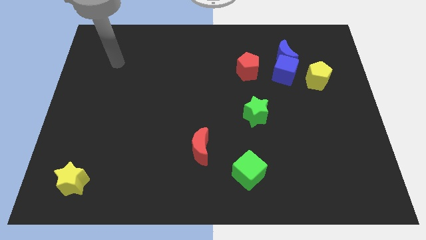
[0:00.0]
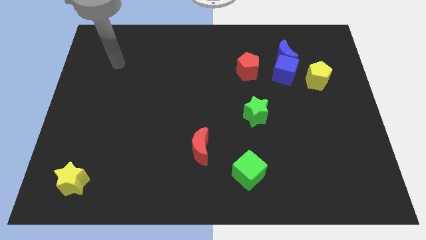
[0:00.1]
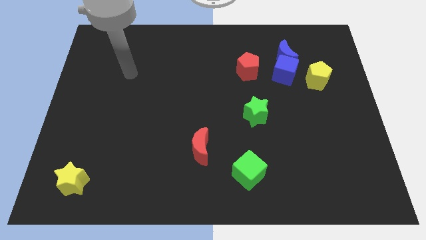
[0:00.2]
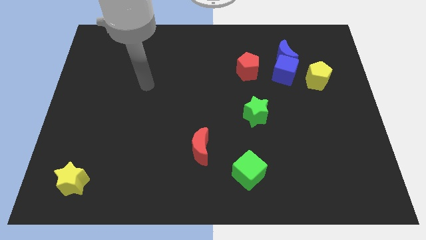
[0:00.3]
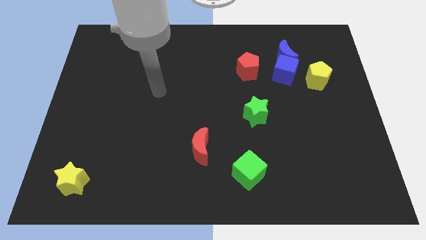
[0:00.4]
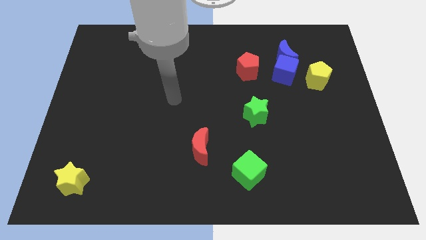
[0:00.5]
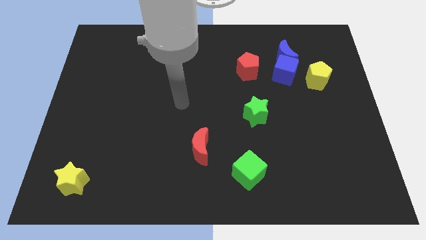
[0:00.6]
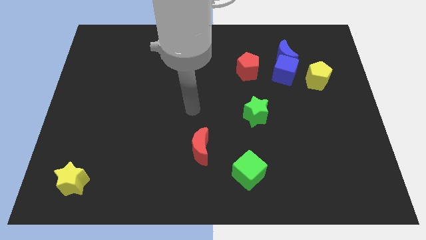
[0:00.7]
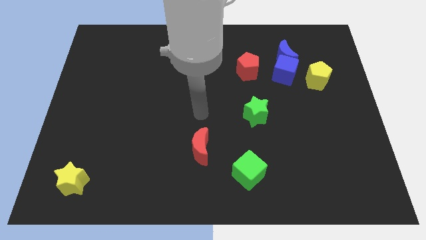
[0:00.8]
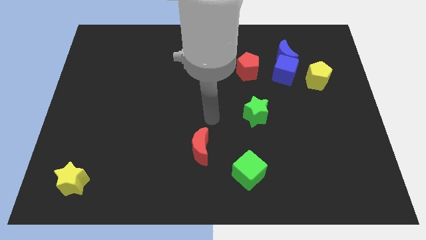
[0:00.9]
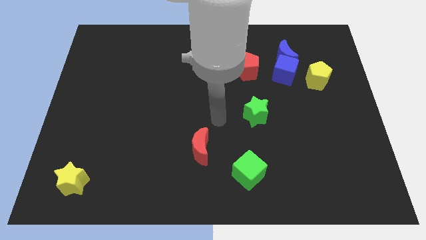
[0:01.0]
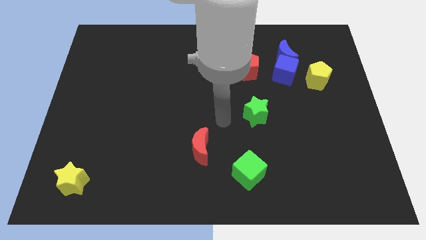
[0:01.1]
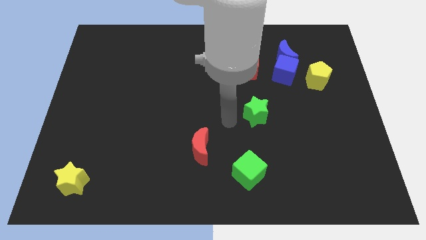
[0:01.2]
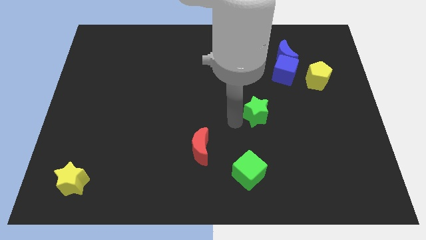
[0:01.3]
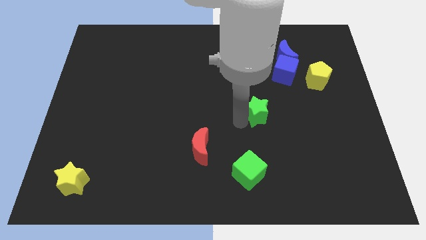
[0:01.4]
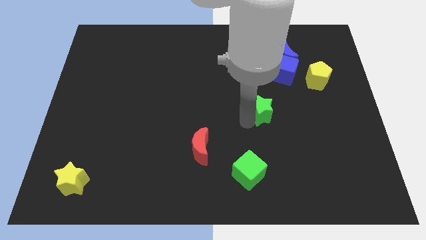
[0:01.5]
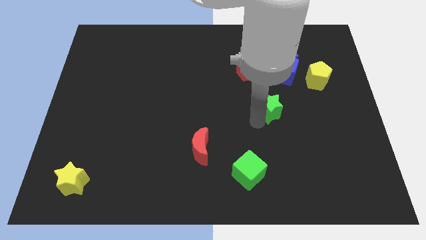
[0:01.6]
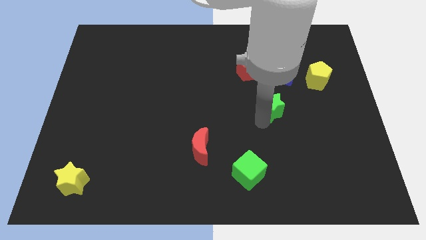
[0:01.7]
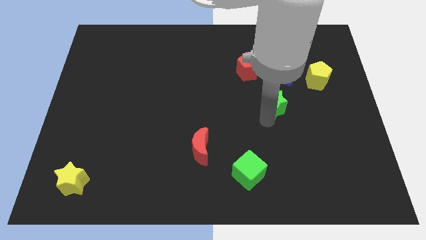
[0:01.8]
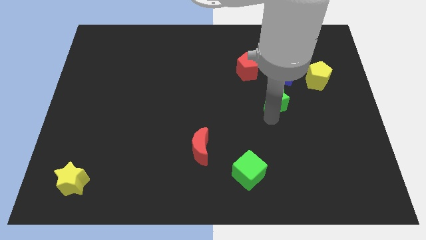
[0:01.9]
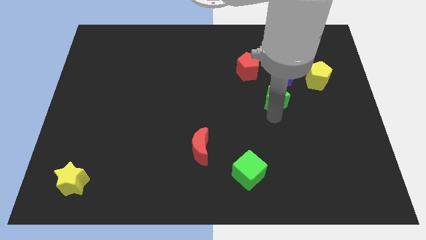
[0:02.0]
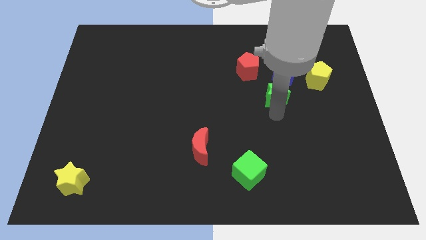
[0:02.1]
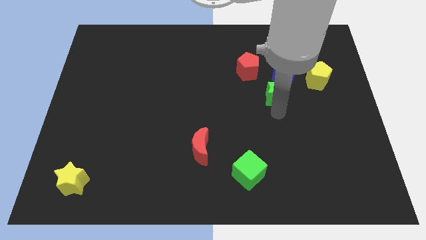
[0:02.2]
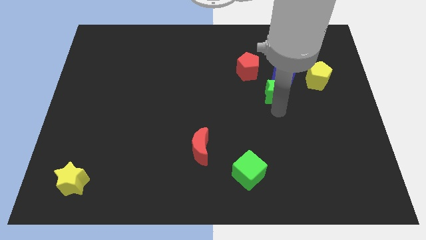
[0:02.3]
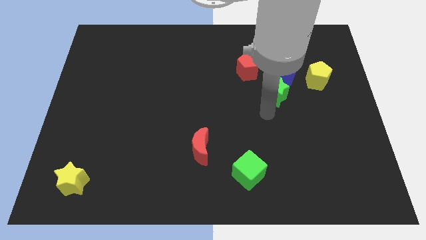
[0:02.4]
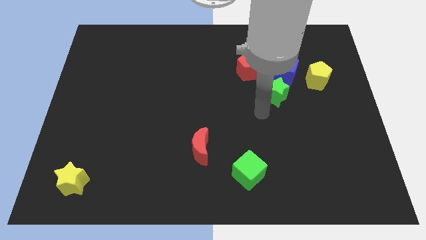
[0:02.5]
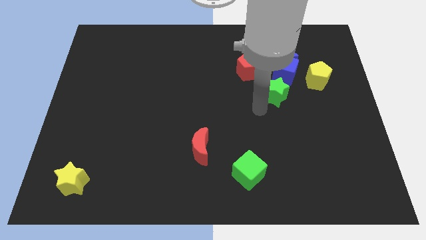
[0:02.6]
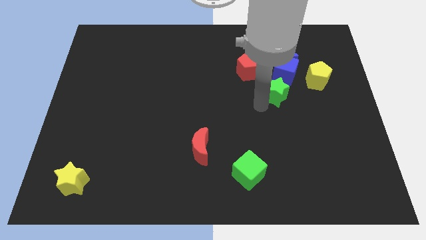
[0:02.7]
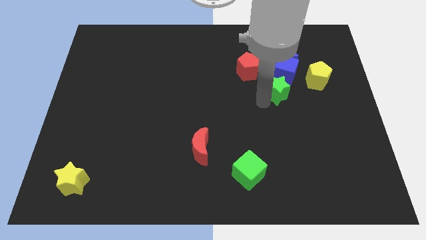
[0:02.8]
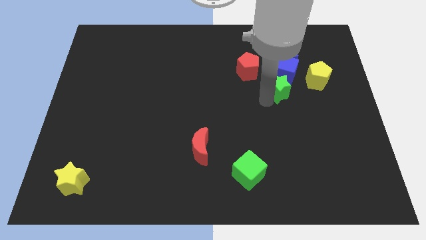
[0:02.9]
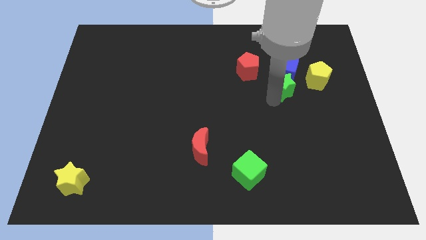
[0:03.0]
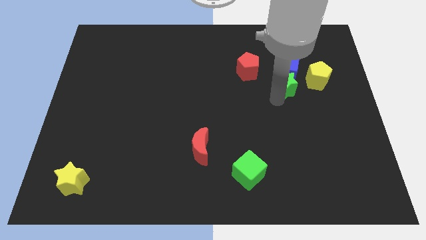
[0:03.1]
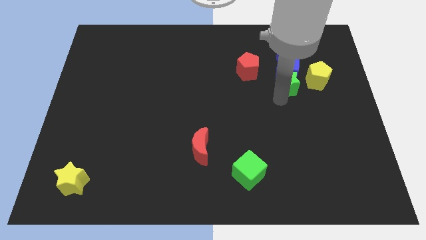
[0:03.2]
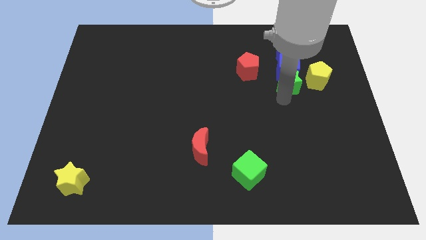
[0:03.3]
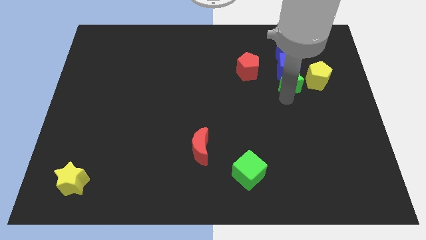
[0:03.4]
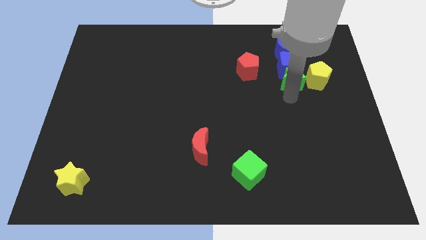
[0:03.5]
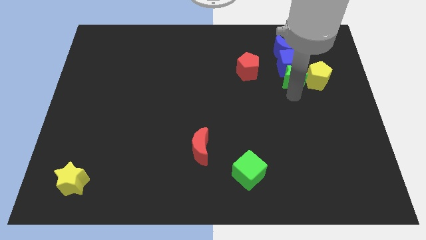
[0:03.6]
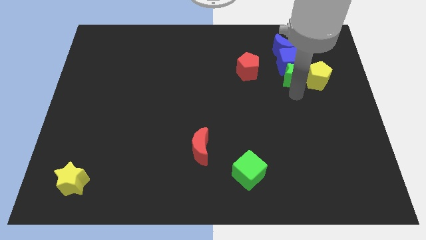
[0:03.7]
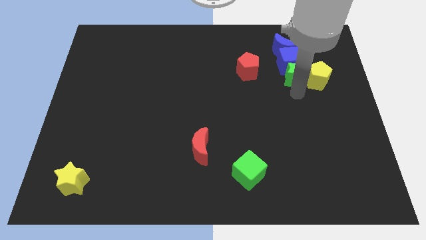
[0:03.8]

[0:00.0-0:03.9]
slide the green star towards the yellow pentagon

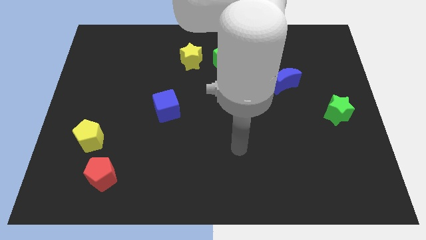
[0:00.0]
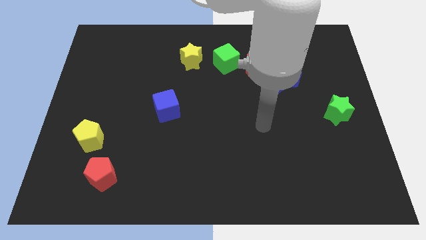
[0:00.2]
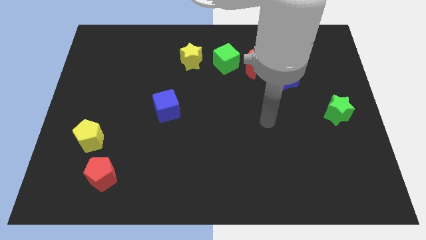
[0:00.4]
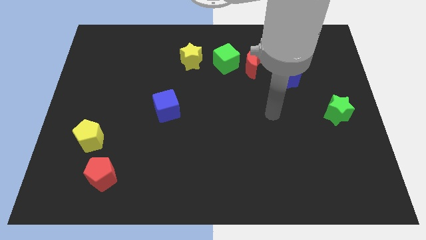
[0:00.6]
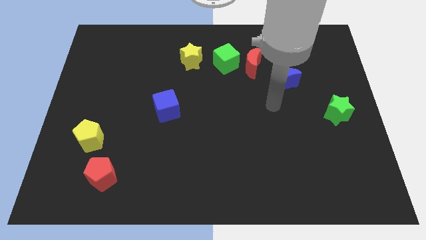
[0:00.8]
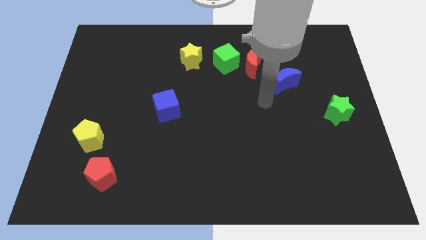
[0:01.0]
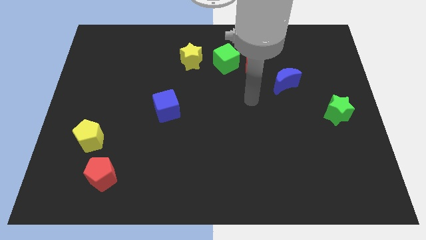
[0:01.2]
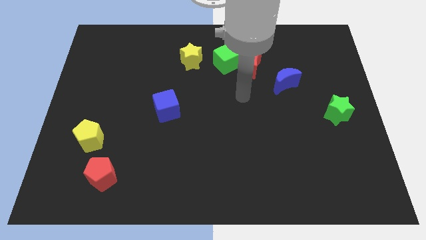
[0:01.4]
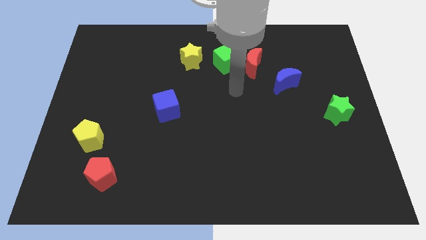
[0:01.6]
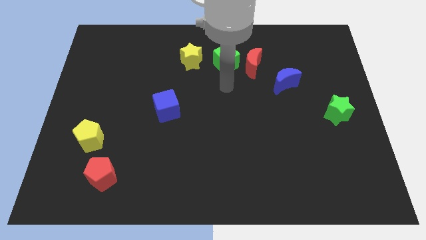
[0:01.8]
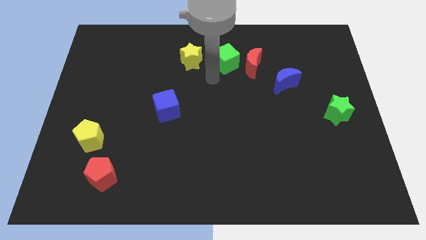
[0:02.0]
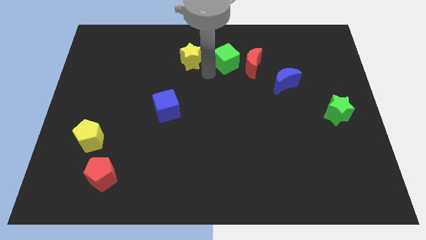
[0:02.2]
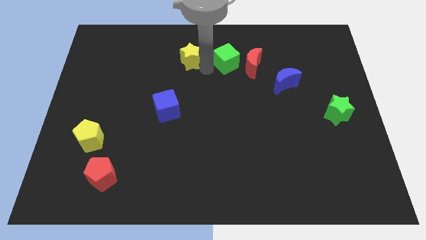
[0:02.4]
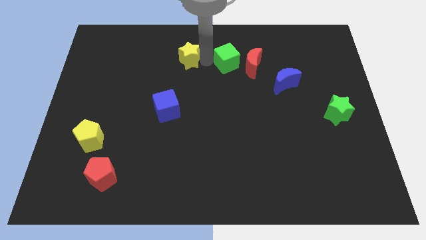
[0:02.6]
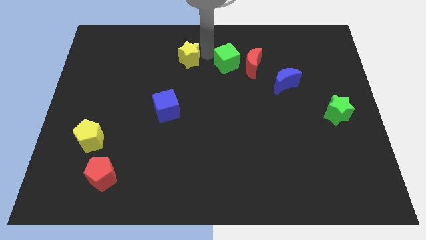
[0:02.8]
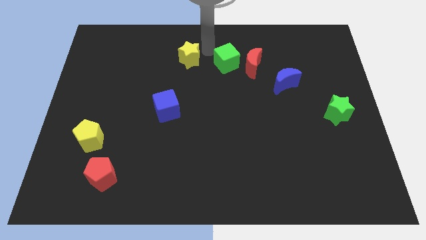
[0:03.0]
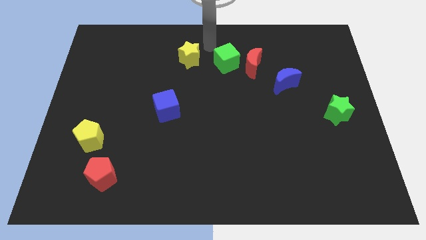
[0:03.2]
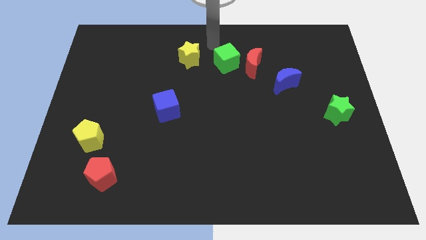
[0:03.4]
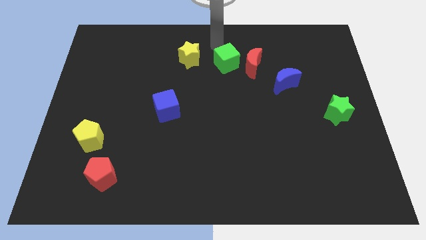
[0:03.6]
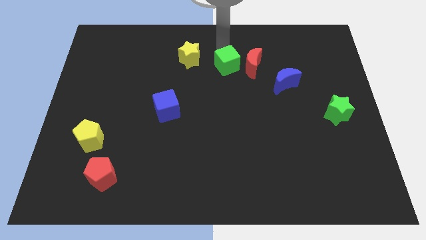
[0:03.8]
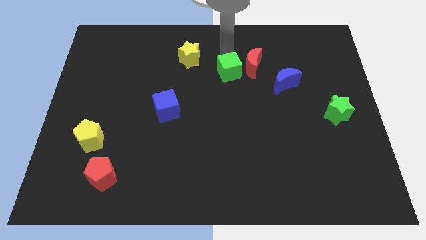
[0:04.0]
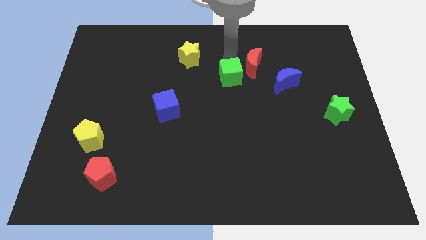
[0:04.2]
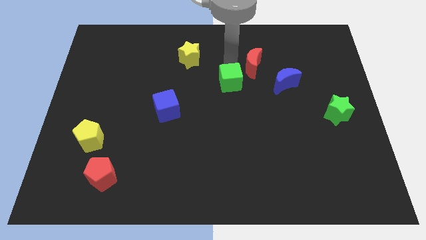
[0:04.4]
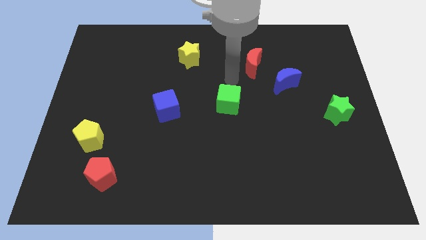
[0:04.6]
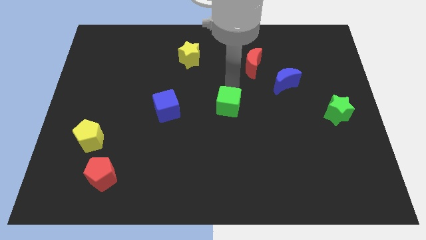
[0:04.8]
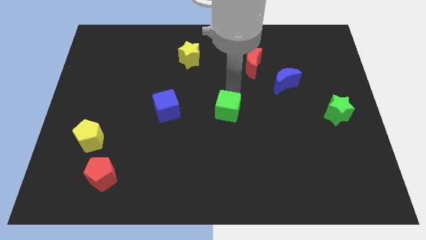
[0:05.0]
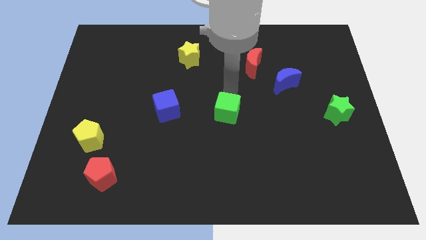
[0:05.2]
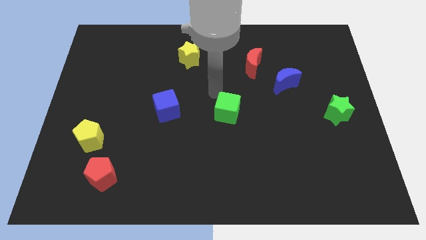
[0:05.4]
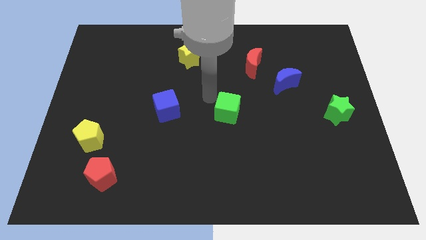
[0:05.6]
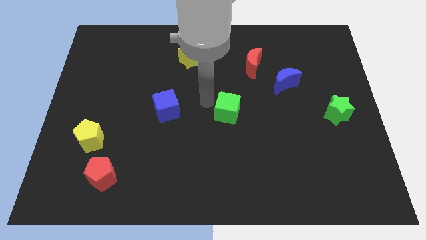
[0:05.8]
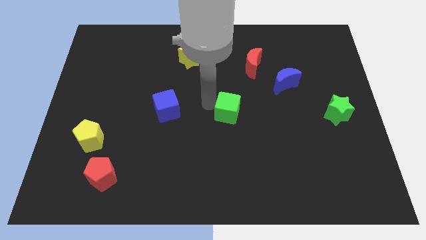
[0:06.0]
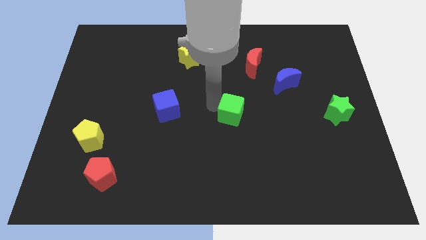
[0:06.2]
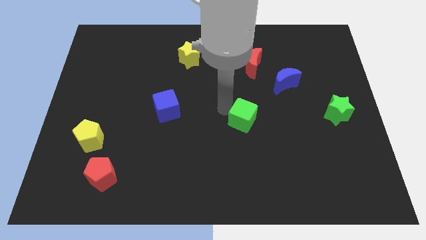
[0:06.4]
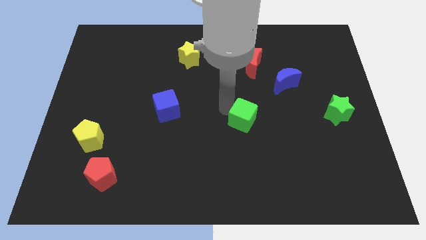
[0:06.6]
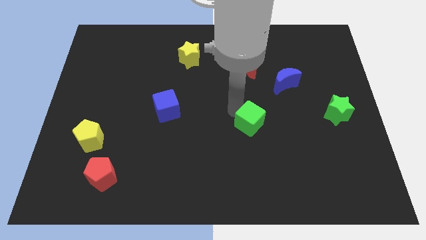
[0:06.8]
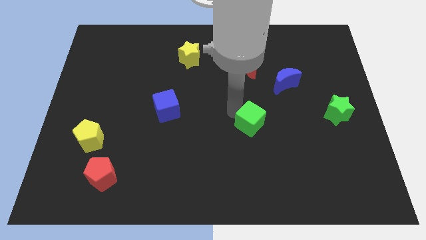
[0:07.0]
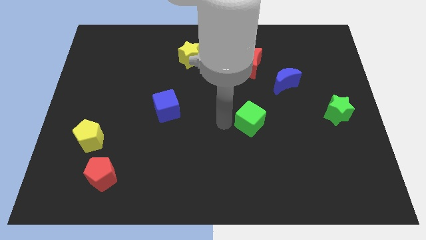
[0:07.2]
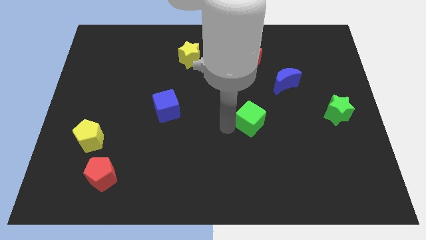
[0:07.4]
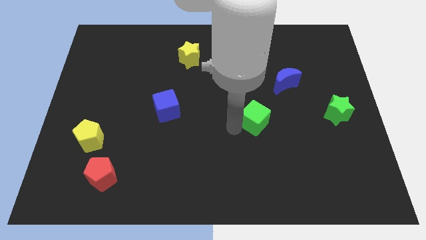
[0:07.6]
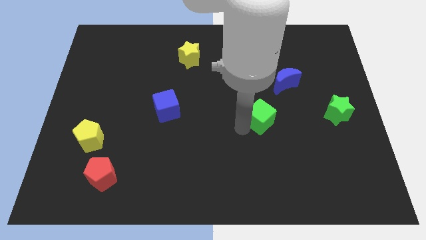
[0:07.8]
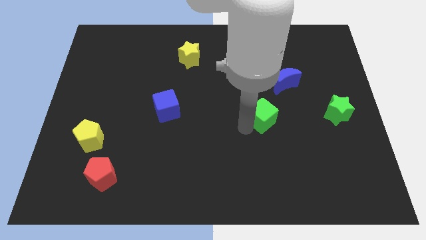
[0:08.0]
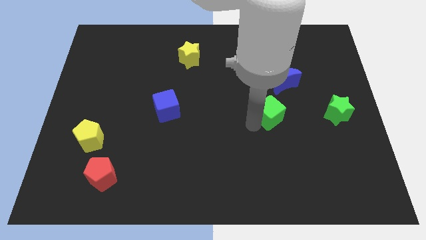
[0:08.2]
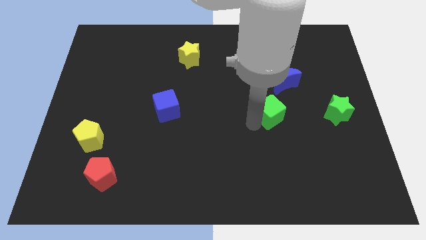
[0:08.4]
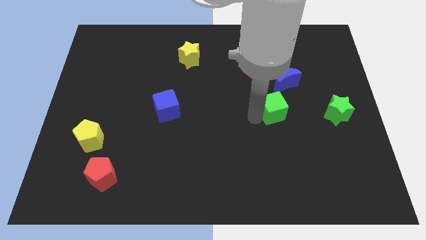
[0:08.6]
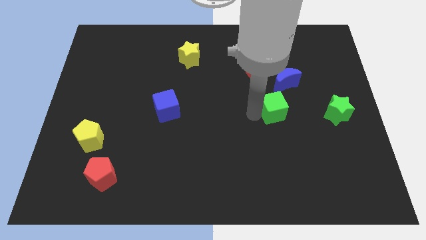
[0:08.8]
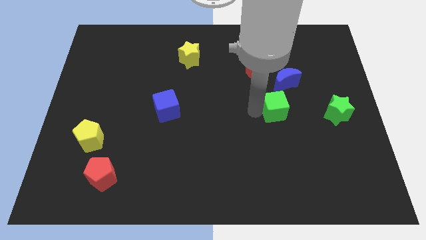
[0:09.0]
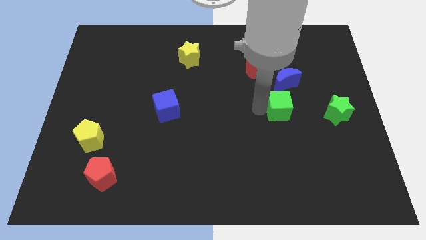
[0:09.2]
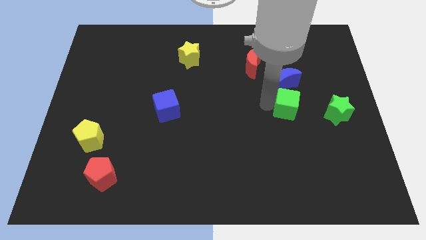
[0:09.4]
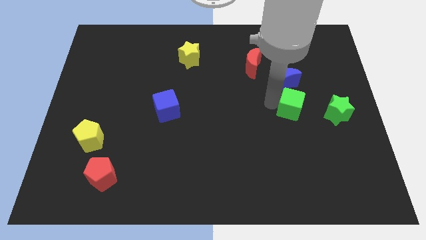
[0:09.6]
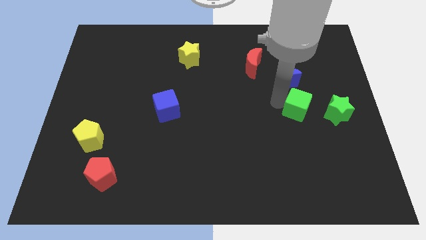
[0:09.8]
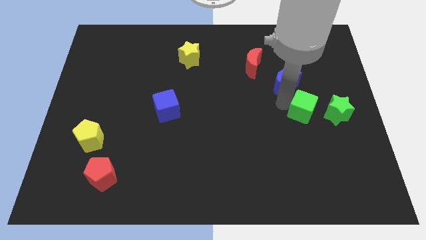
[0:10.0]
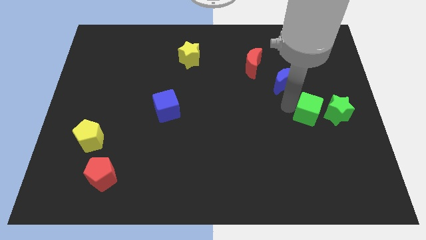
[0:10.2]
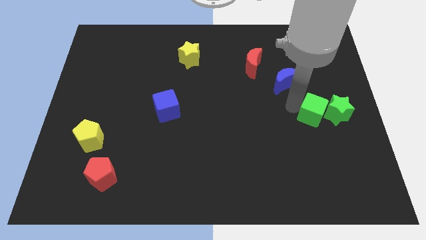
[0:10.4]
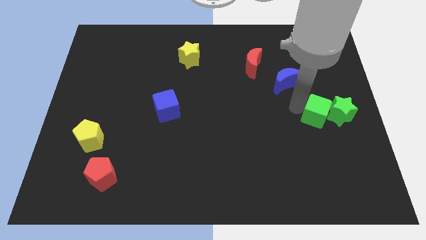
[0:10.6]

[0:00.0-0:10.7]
move the green cube close to the green star
